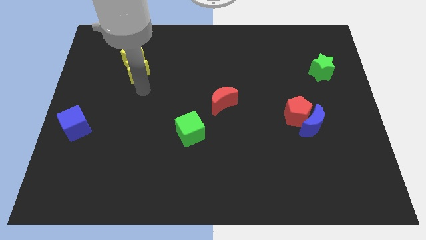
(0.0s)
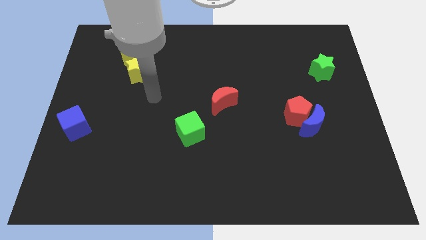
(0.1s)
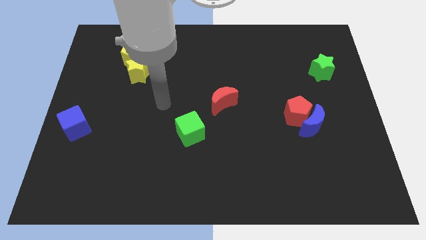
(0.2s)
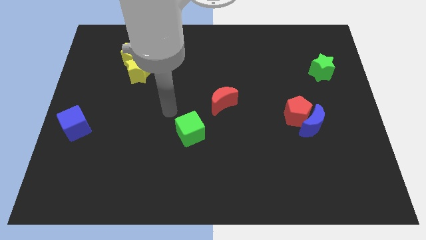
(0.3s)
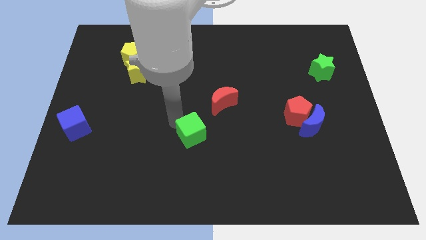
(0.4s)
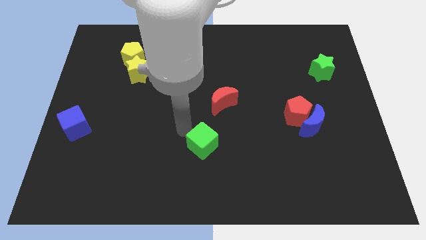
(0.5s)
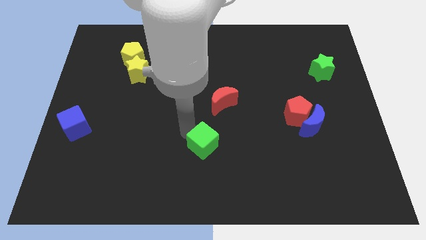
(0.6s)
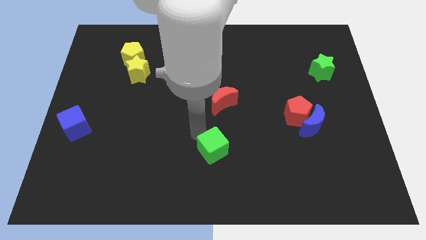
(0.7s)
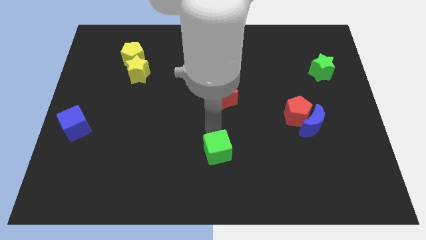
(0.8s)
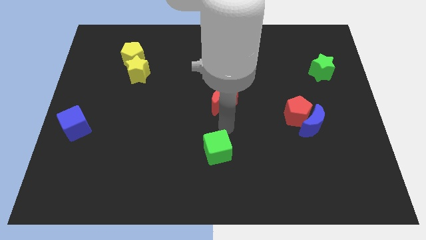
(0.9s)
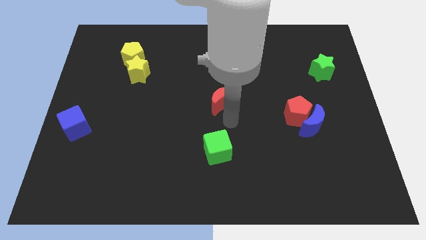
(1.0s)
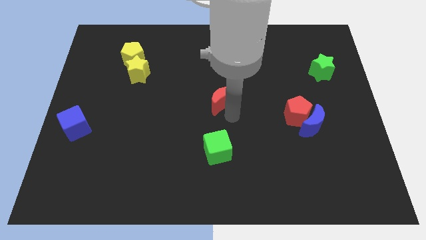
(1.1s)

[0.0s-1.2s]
move the green cube slightly to the bottom

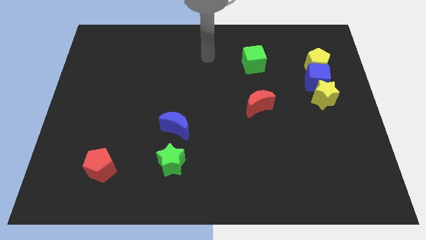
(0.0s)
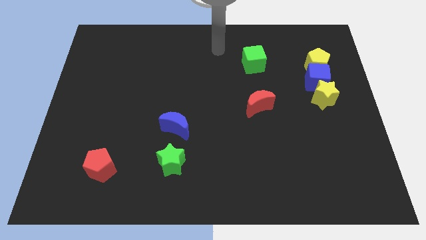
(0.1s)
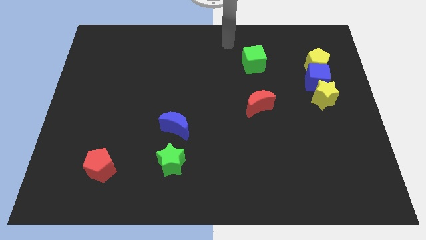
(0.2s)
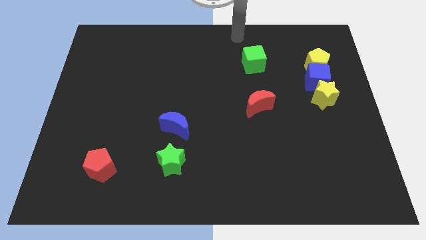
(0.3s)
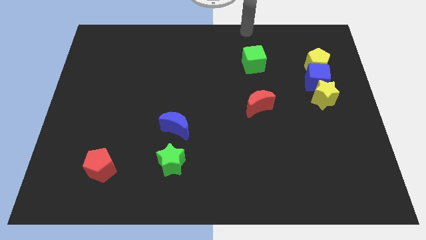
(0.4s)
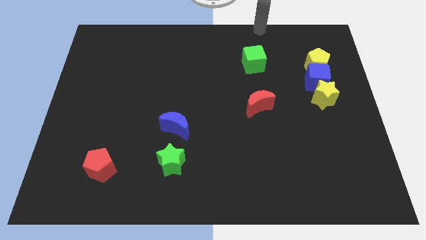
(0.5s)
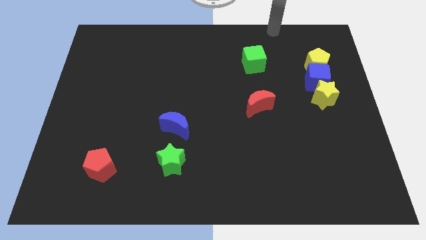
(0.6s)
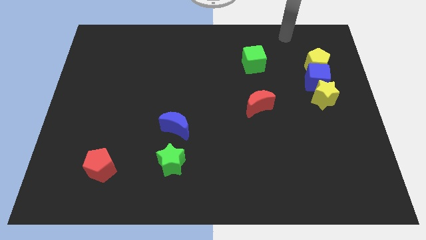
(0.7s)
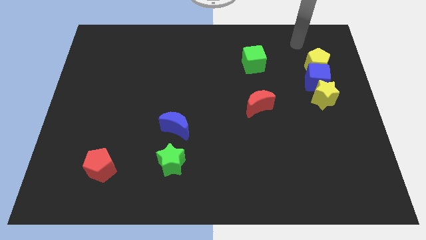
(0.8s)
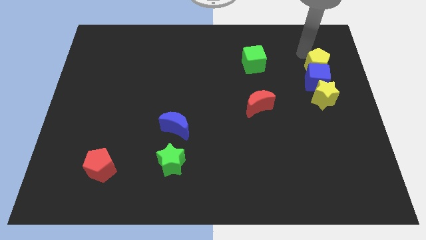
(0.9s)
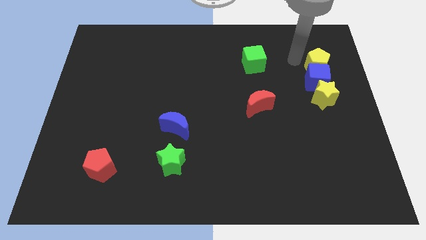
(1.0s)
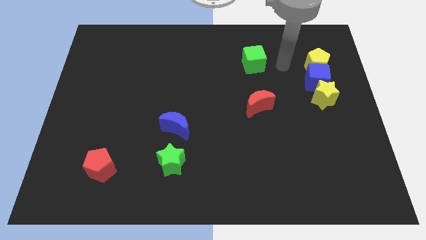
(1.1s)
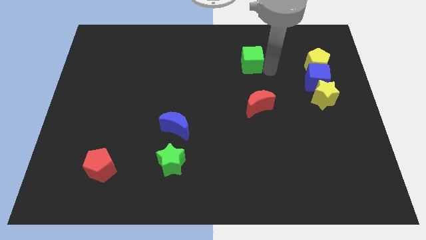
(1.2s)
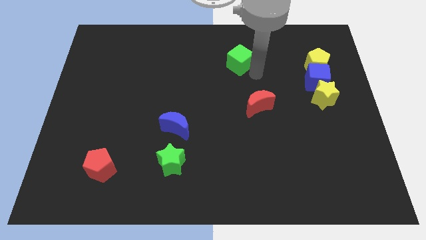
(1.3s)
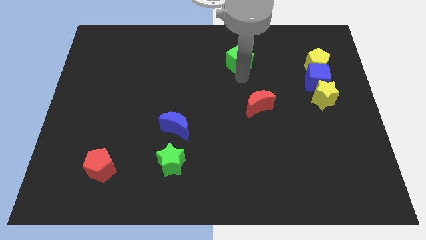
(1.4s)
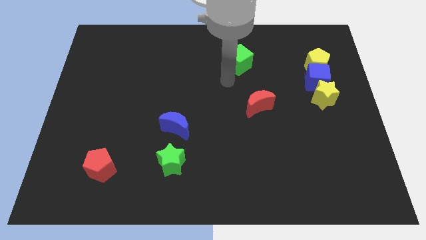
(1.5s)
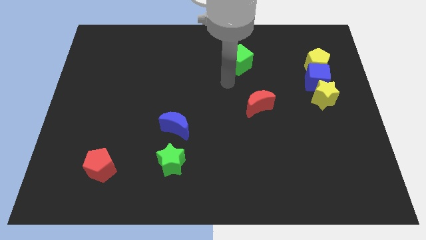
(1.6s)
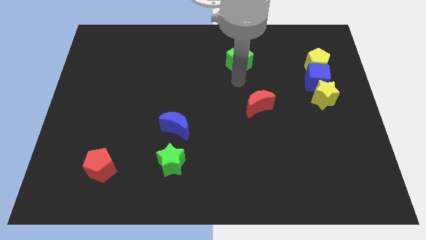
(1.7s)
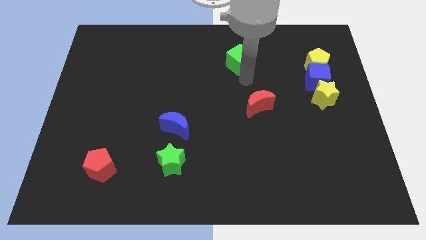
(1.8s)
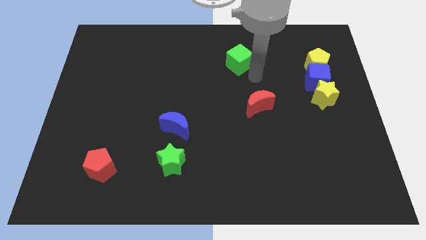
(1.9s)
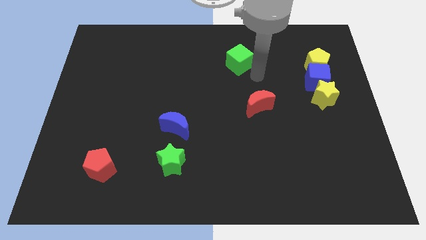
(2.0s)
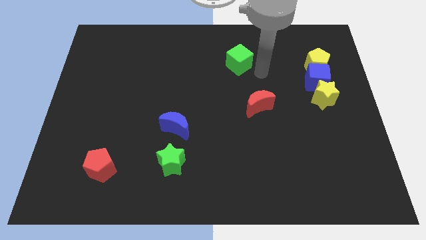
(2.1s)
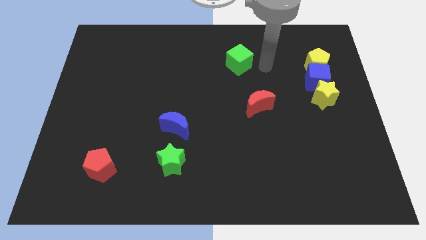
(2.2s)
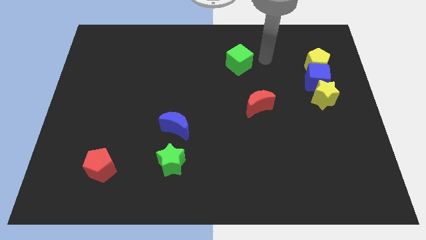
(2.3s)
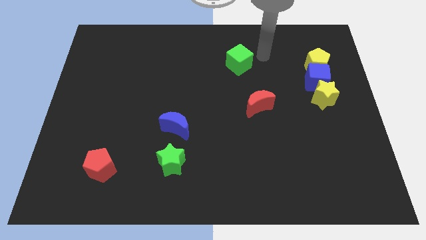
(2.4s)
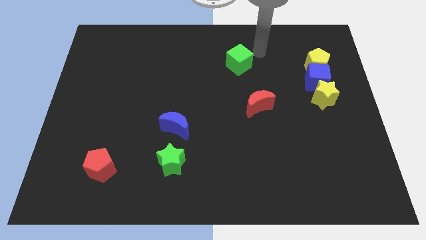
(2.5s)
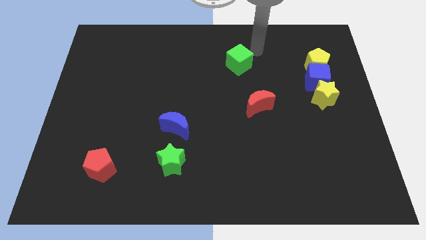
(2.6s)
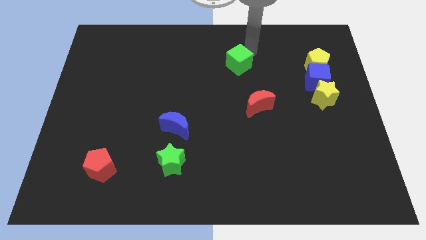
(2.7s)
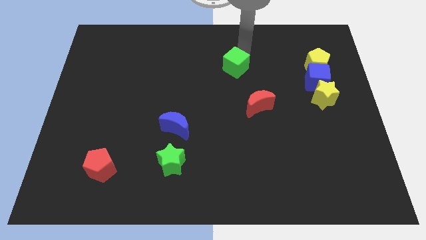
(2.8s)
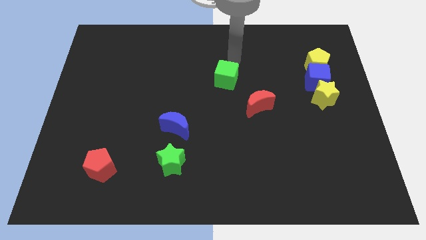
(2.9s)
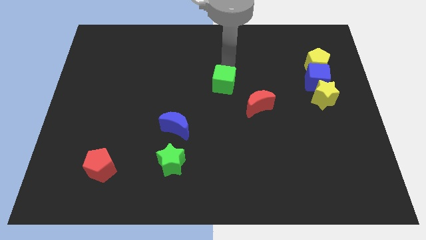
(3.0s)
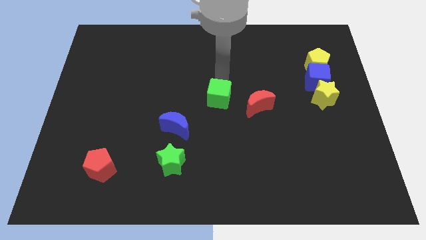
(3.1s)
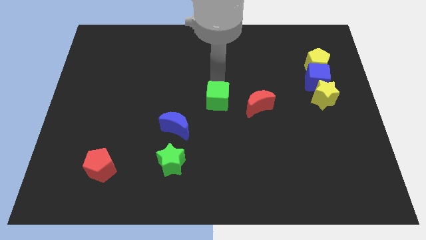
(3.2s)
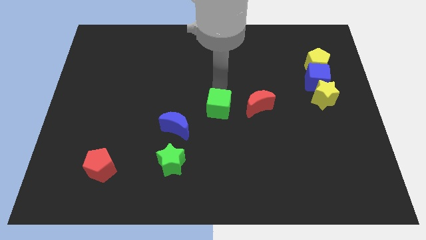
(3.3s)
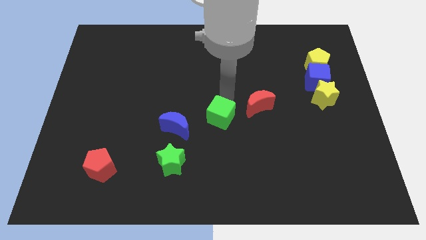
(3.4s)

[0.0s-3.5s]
place the green cube left to the red moon

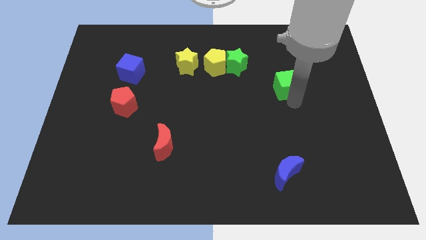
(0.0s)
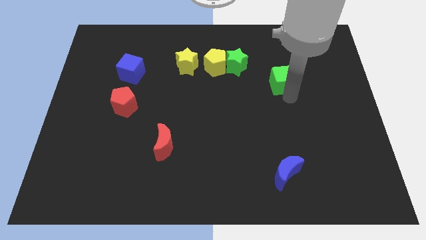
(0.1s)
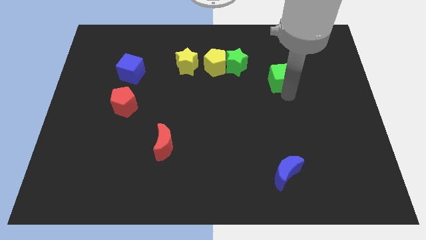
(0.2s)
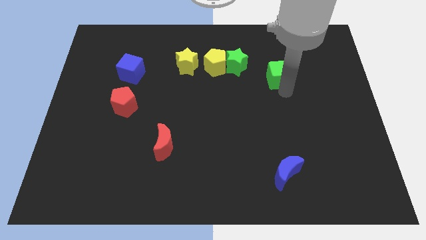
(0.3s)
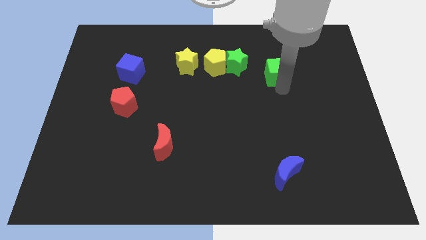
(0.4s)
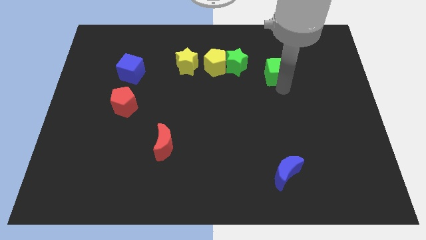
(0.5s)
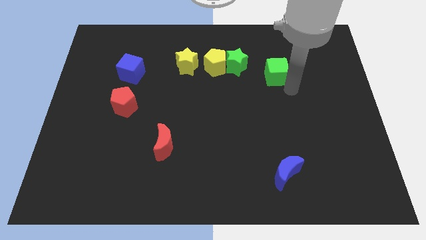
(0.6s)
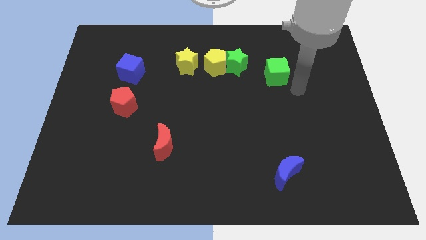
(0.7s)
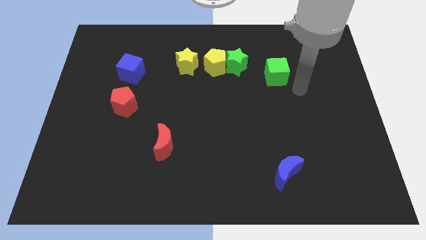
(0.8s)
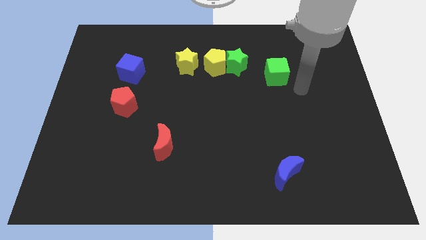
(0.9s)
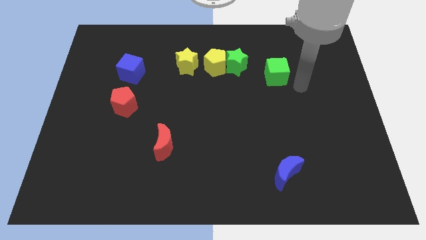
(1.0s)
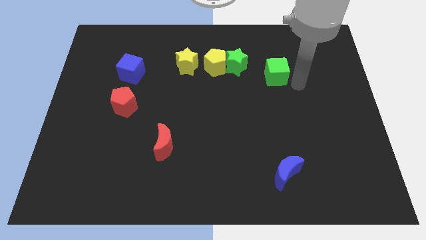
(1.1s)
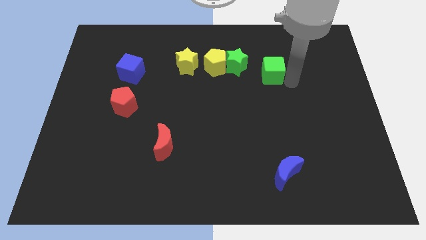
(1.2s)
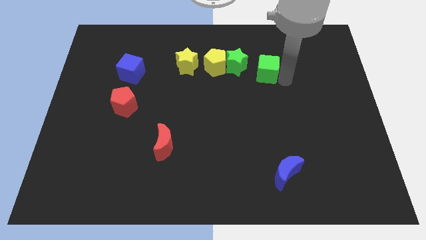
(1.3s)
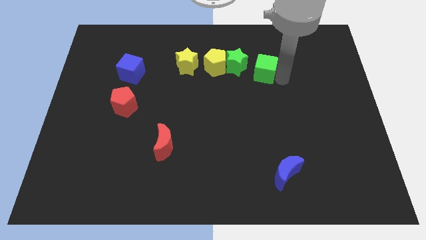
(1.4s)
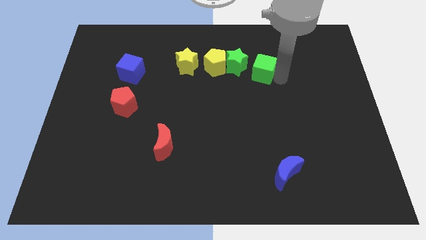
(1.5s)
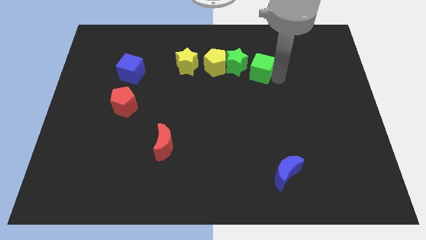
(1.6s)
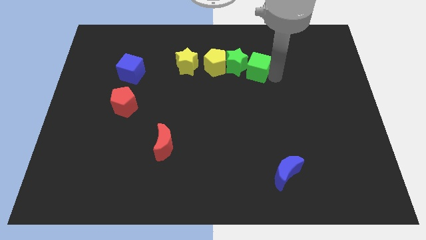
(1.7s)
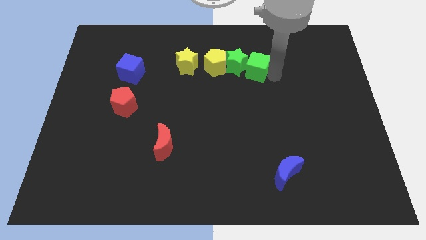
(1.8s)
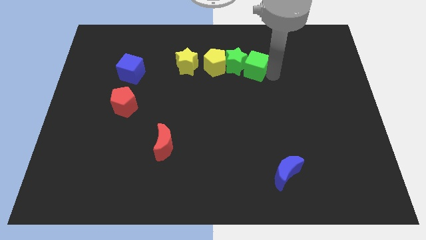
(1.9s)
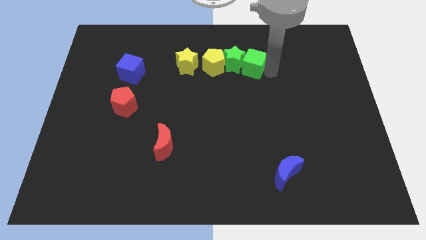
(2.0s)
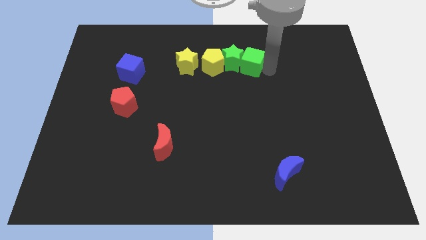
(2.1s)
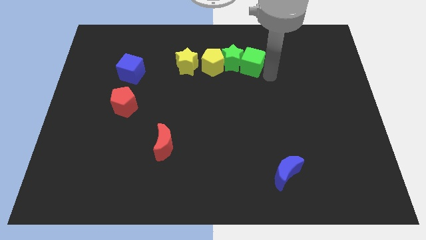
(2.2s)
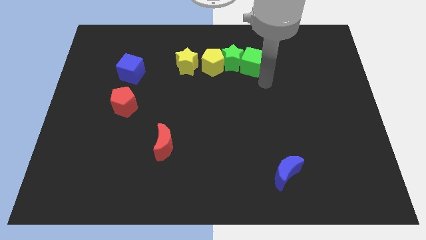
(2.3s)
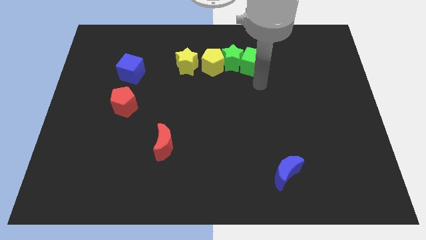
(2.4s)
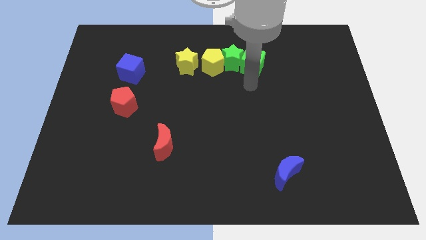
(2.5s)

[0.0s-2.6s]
push the green cube to the right side of the green star

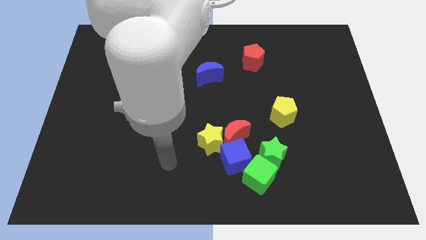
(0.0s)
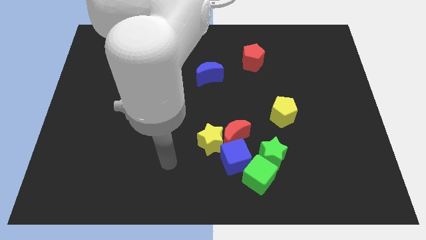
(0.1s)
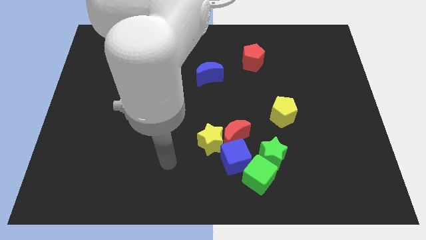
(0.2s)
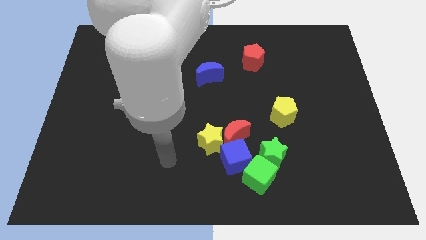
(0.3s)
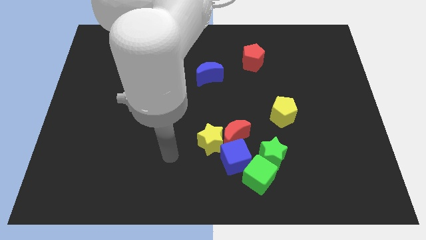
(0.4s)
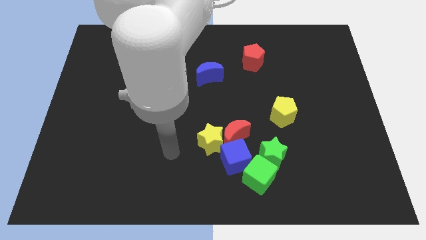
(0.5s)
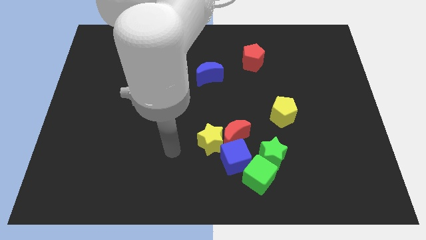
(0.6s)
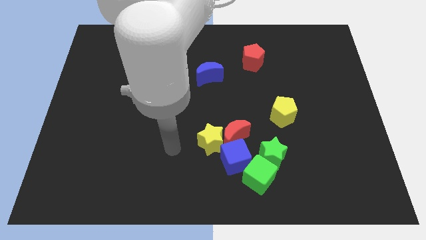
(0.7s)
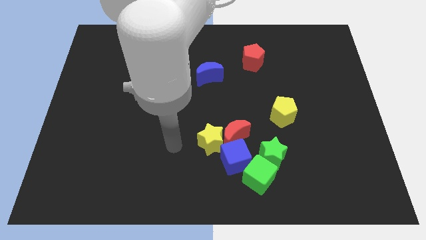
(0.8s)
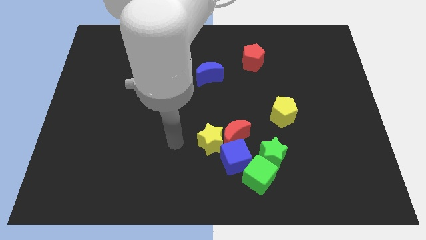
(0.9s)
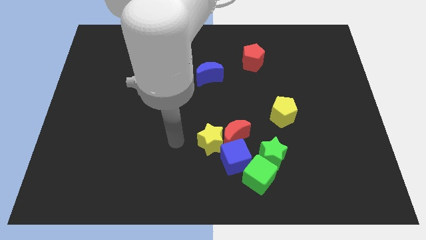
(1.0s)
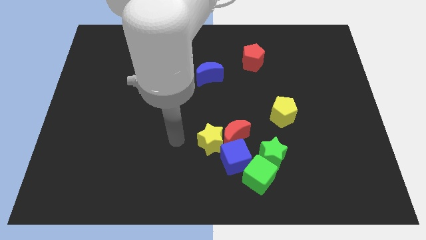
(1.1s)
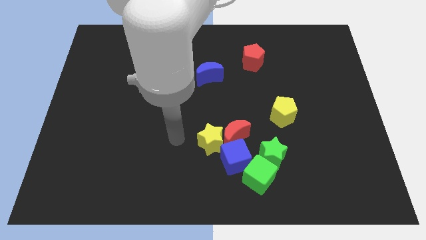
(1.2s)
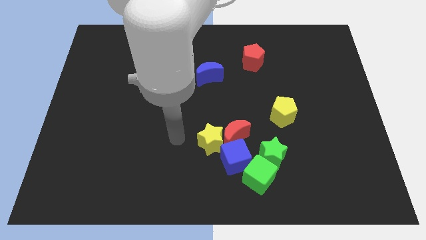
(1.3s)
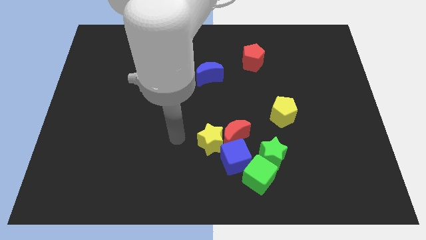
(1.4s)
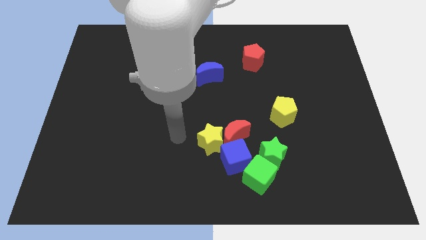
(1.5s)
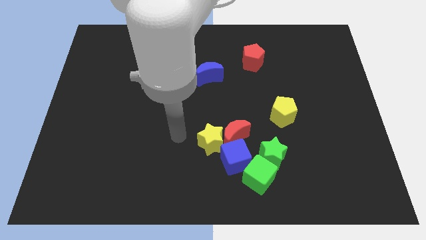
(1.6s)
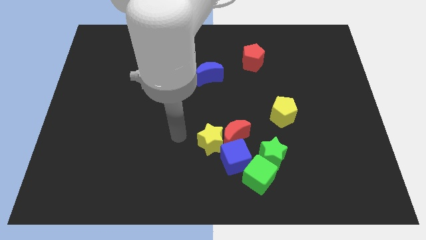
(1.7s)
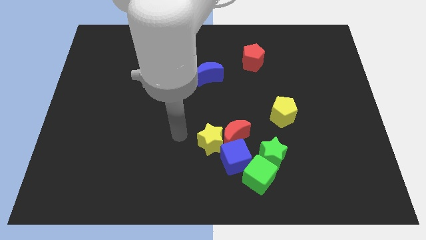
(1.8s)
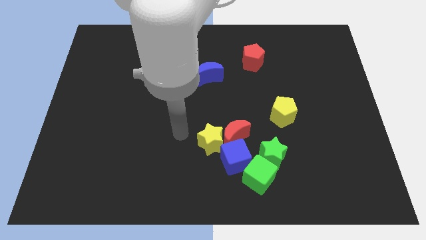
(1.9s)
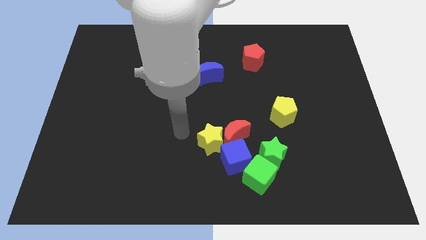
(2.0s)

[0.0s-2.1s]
move your arm to the left of yellow star
